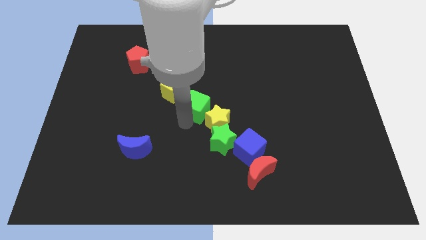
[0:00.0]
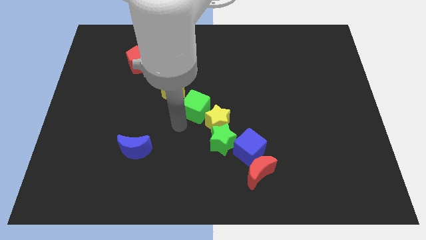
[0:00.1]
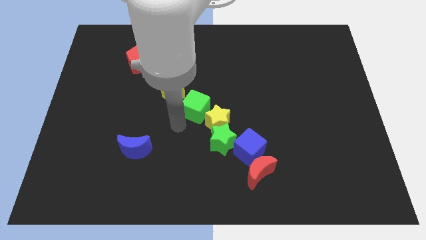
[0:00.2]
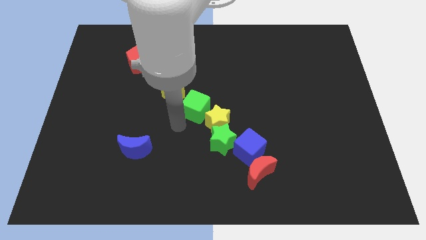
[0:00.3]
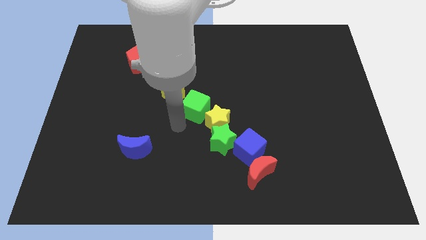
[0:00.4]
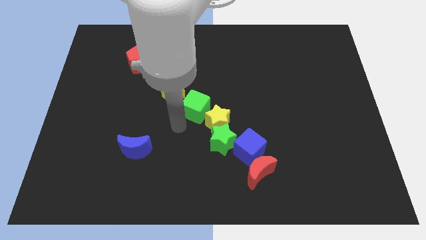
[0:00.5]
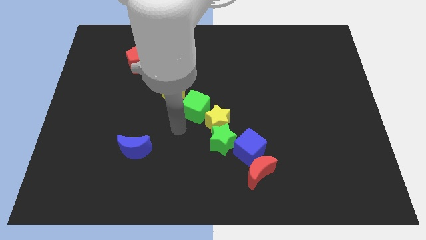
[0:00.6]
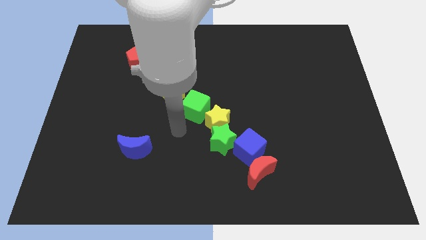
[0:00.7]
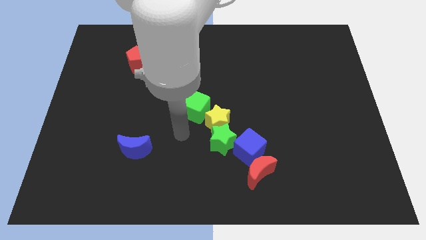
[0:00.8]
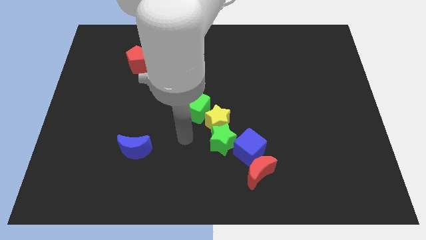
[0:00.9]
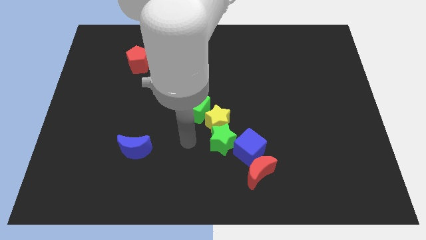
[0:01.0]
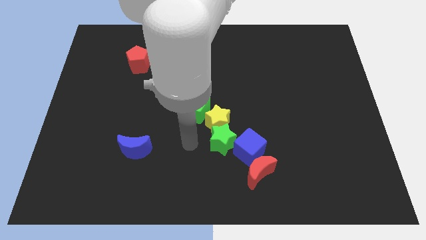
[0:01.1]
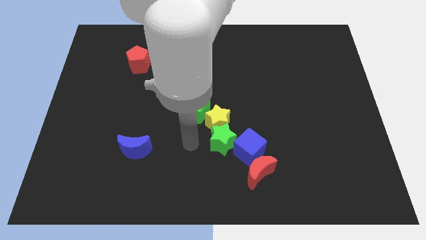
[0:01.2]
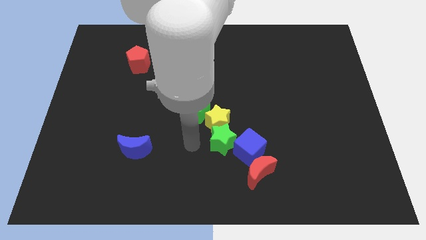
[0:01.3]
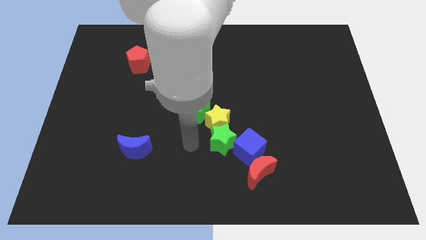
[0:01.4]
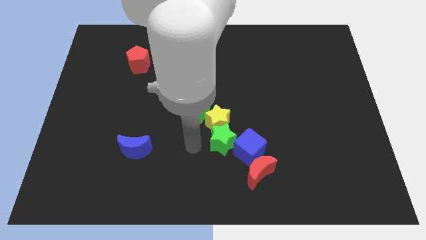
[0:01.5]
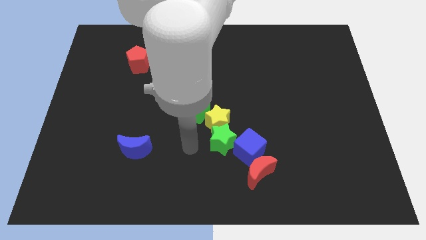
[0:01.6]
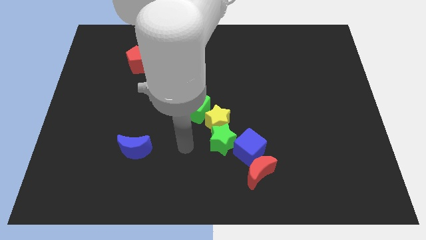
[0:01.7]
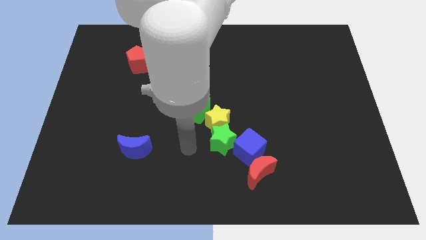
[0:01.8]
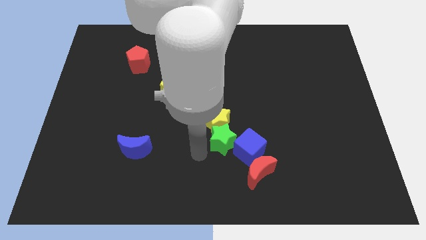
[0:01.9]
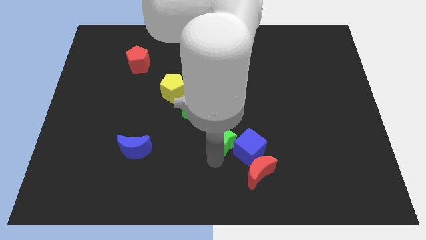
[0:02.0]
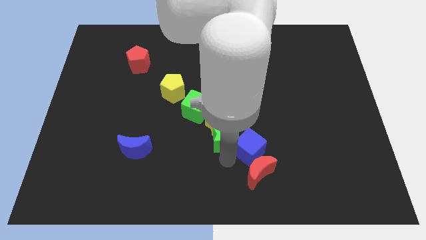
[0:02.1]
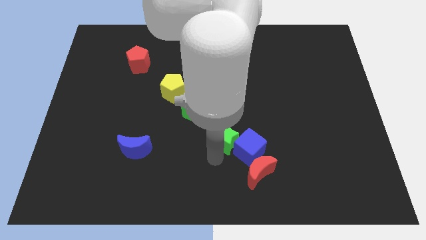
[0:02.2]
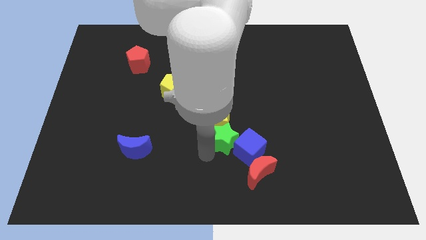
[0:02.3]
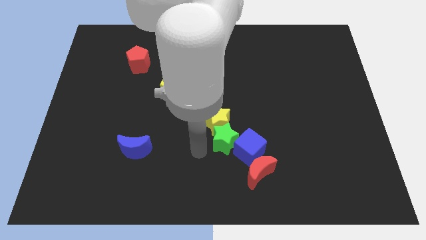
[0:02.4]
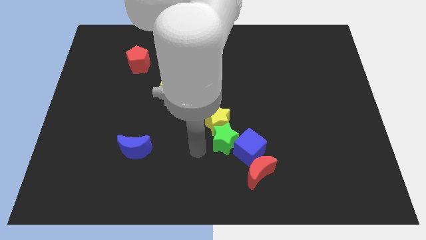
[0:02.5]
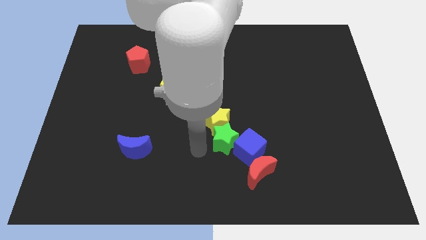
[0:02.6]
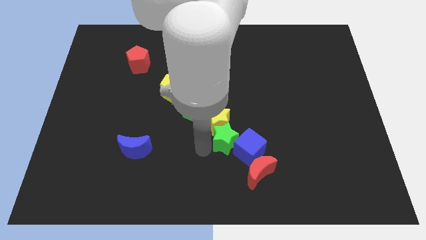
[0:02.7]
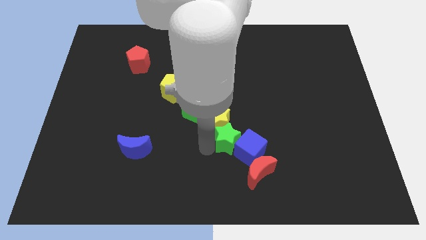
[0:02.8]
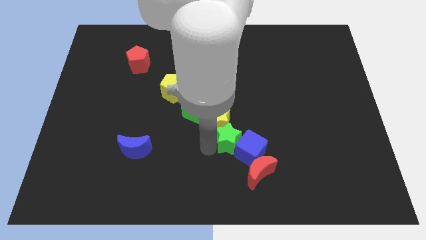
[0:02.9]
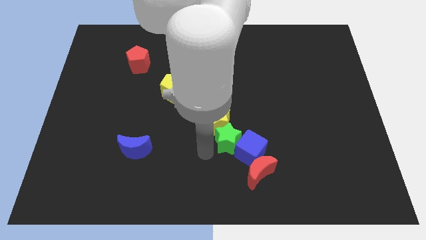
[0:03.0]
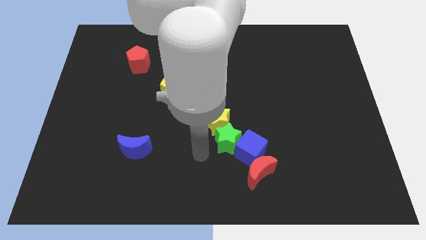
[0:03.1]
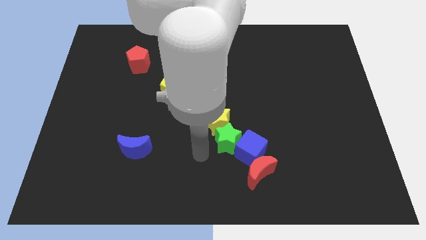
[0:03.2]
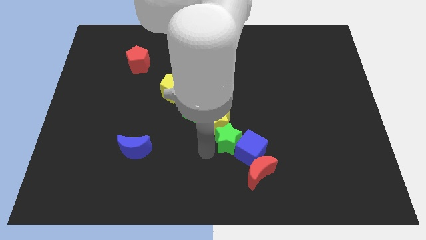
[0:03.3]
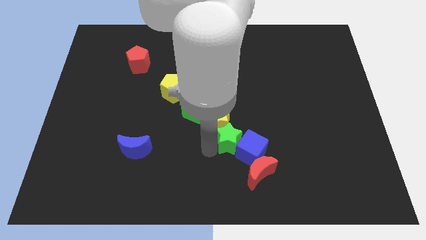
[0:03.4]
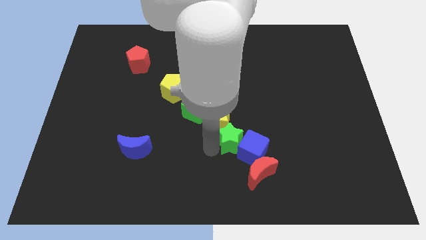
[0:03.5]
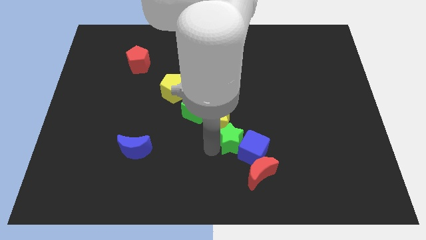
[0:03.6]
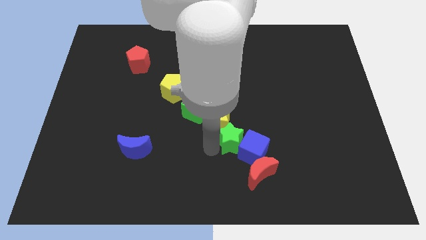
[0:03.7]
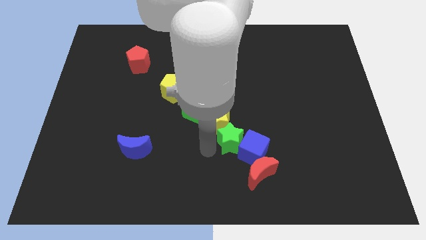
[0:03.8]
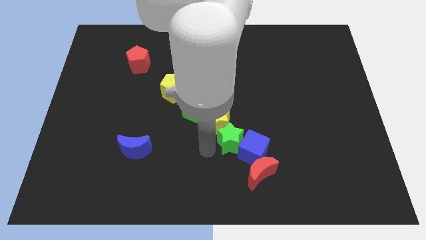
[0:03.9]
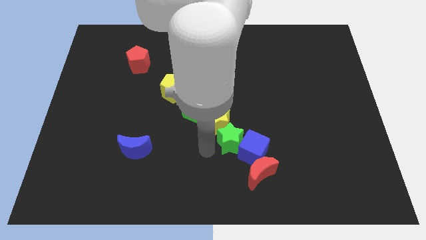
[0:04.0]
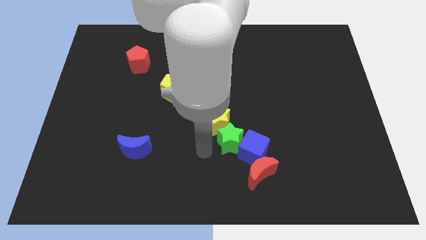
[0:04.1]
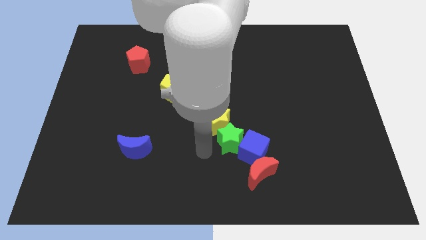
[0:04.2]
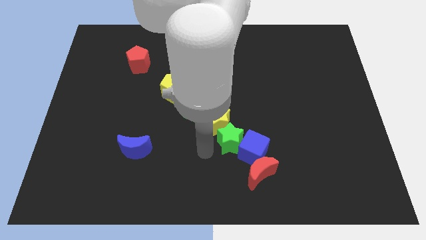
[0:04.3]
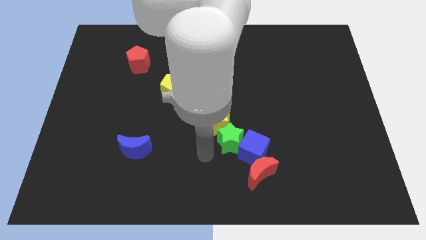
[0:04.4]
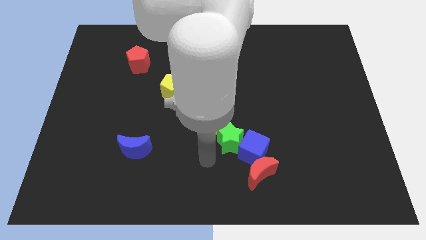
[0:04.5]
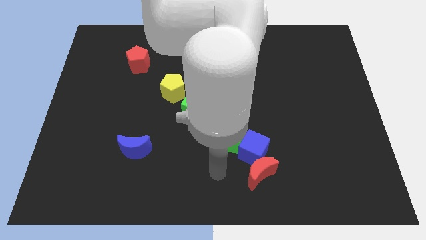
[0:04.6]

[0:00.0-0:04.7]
push the green star into the blue cube

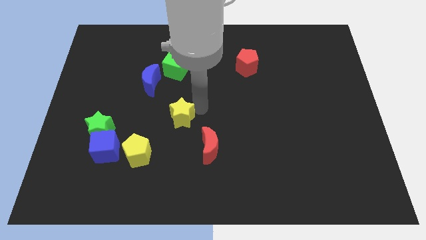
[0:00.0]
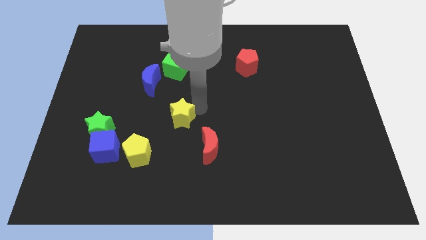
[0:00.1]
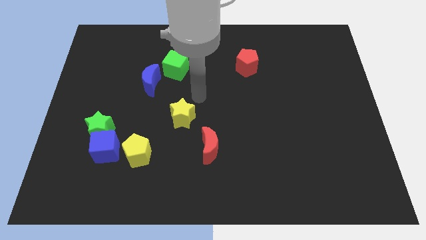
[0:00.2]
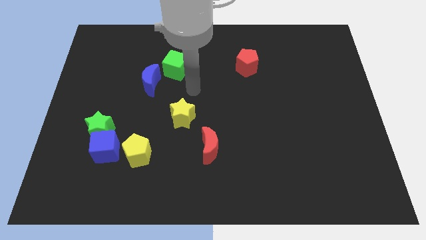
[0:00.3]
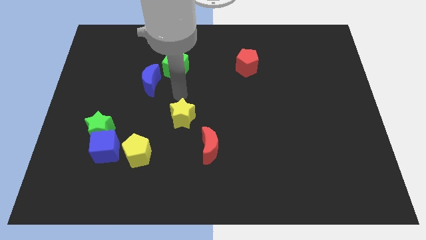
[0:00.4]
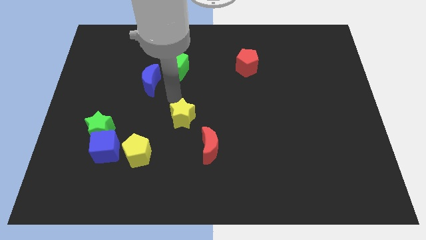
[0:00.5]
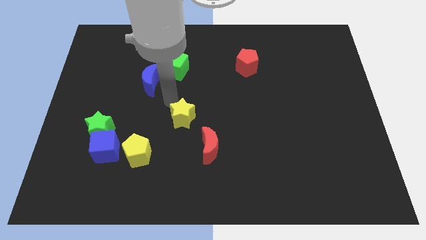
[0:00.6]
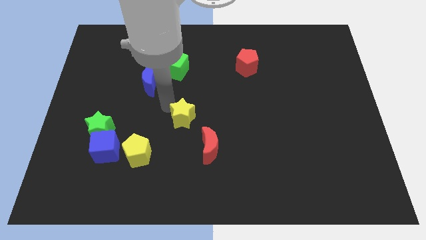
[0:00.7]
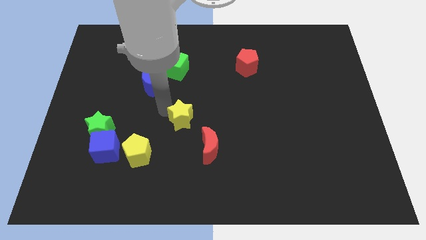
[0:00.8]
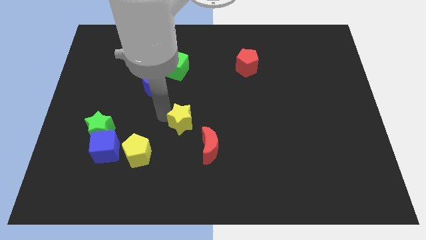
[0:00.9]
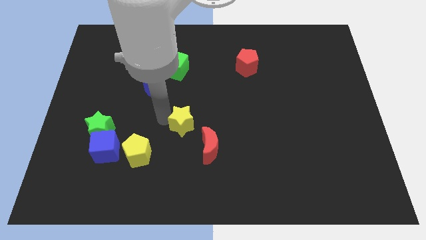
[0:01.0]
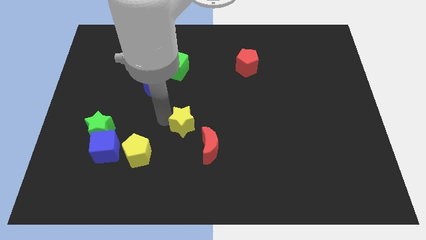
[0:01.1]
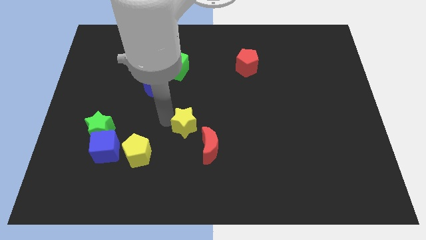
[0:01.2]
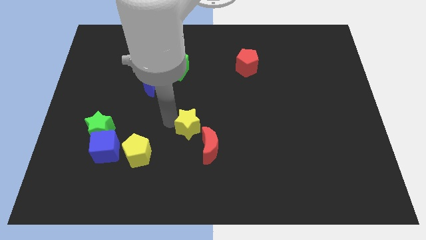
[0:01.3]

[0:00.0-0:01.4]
move the yellow star towards the red crescent

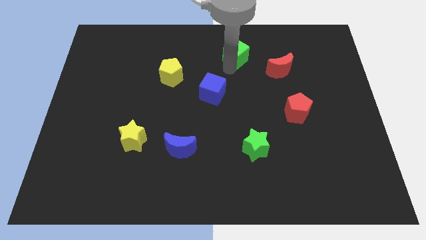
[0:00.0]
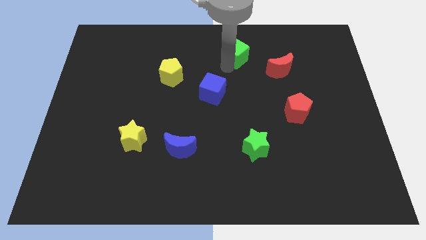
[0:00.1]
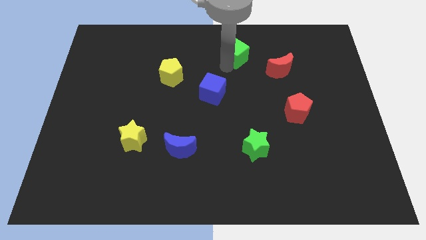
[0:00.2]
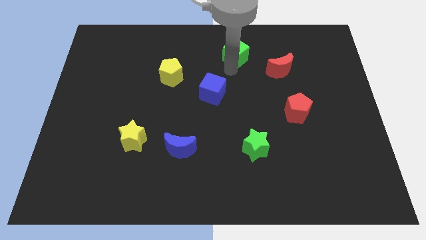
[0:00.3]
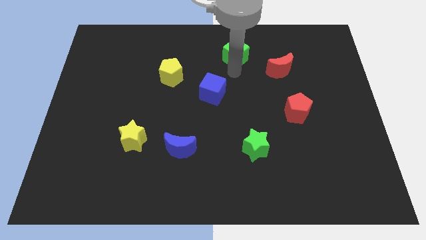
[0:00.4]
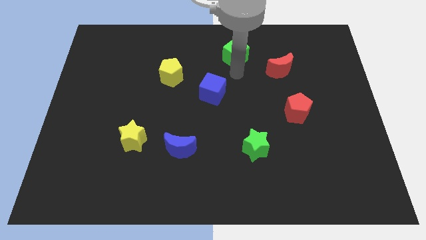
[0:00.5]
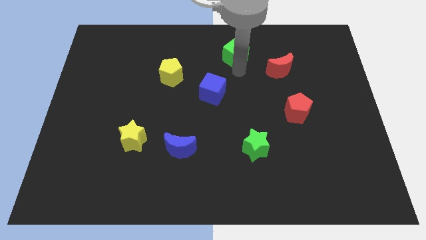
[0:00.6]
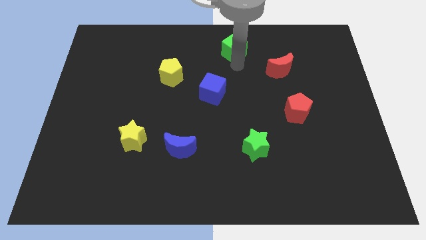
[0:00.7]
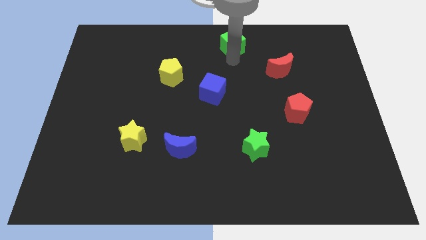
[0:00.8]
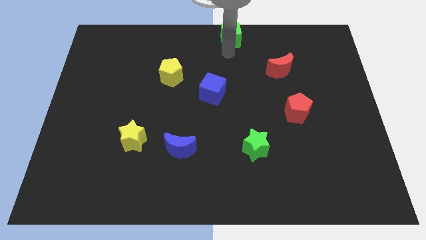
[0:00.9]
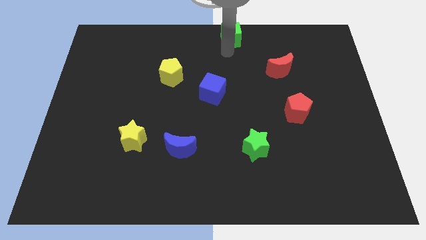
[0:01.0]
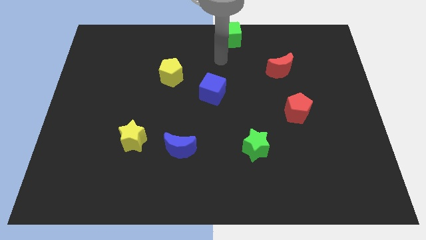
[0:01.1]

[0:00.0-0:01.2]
push green cube slightly upwards

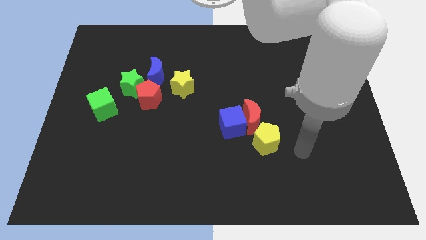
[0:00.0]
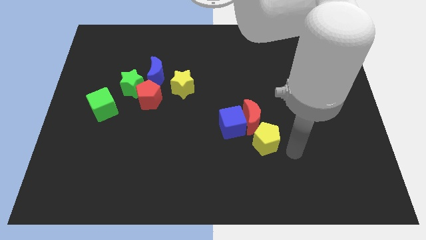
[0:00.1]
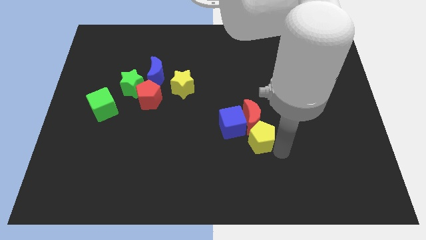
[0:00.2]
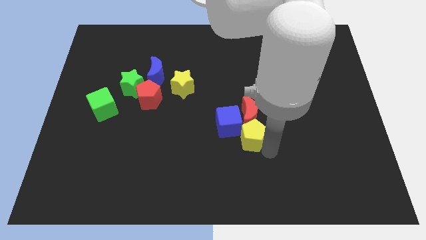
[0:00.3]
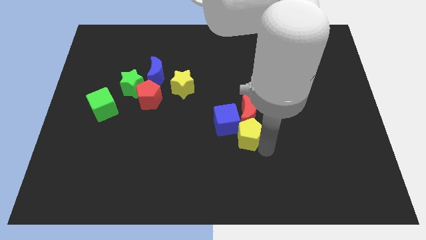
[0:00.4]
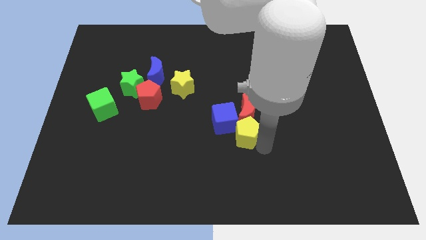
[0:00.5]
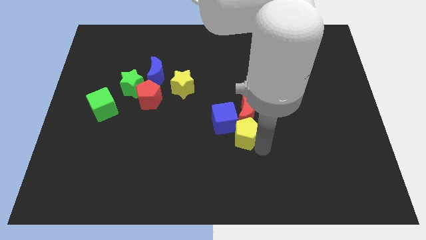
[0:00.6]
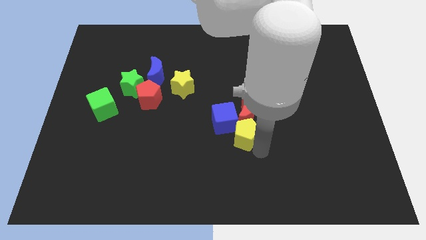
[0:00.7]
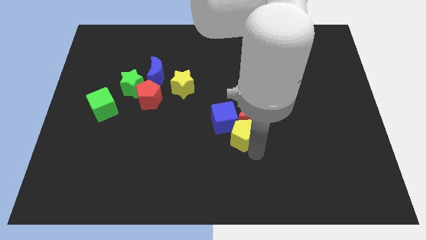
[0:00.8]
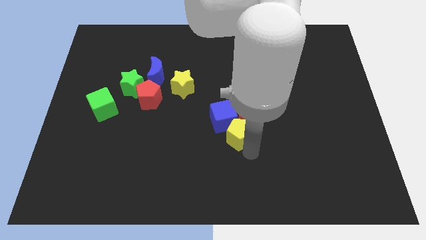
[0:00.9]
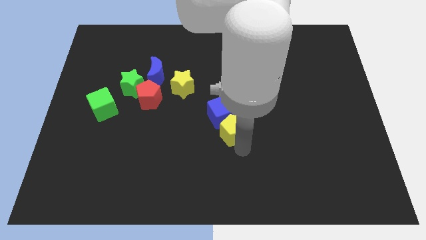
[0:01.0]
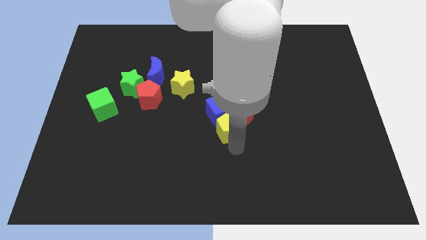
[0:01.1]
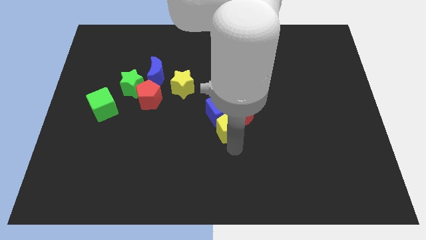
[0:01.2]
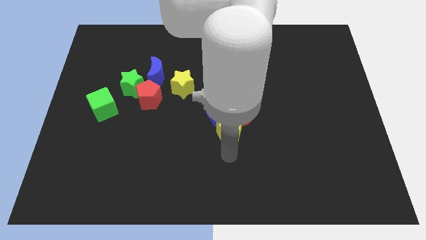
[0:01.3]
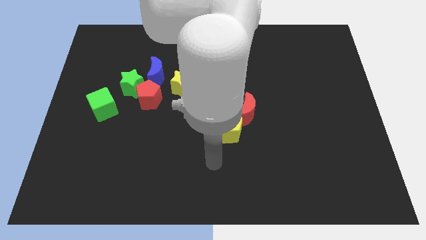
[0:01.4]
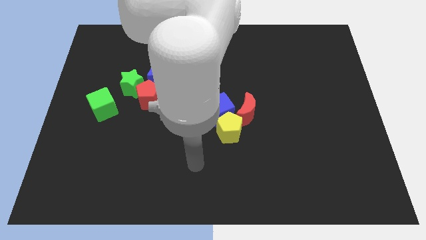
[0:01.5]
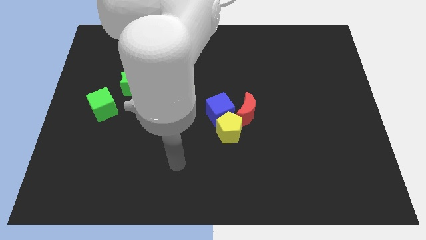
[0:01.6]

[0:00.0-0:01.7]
push the yellow pentagon into blue cube
